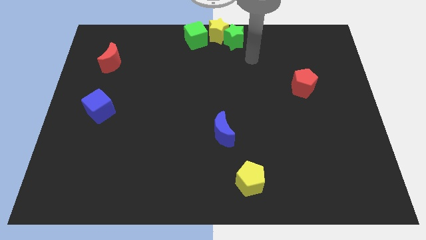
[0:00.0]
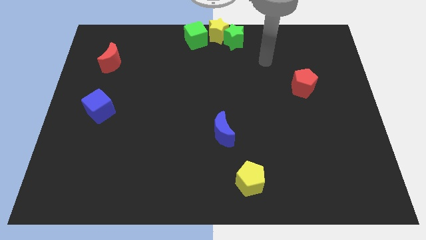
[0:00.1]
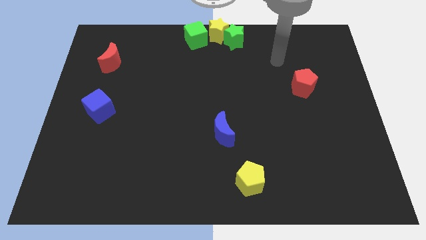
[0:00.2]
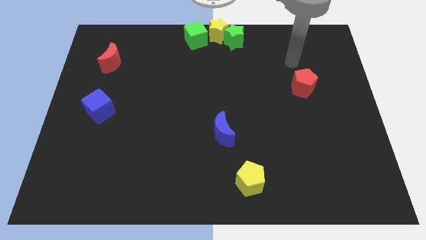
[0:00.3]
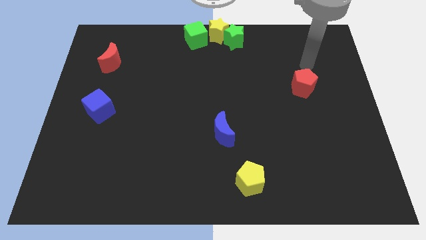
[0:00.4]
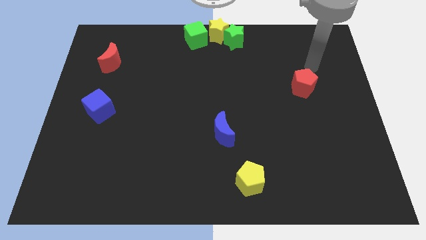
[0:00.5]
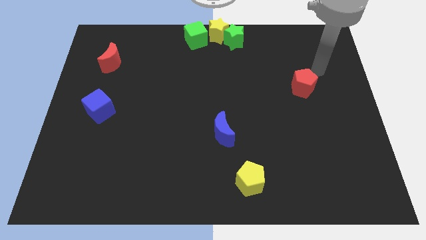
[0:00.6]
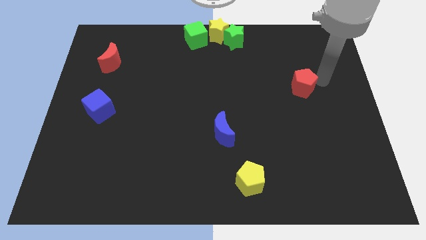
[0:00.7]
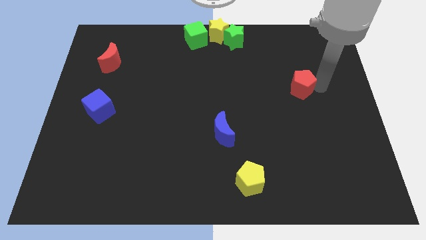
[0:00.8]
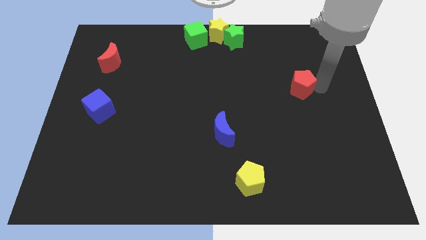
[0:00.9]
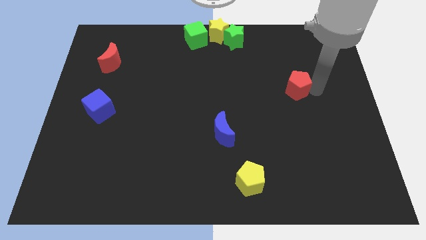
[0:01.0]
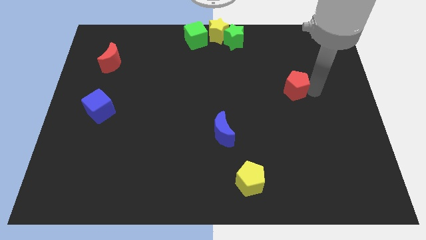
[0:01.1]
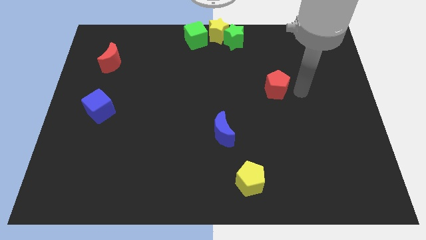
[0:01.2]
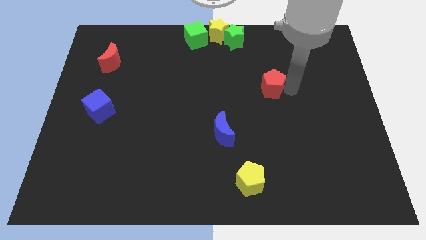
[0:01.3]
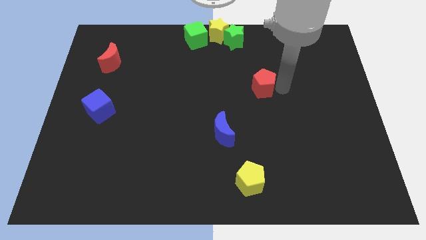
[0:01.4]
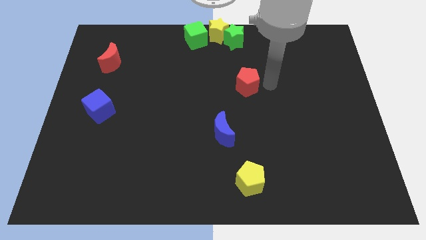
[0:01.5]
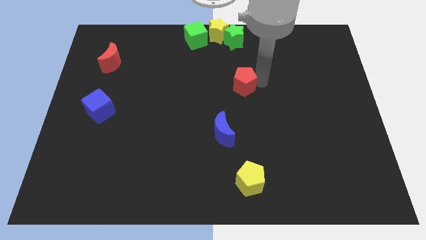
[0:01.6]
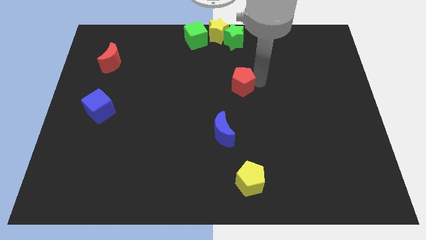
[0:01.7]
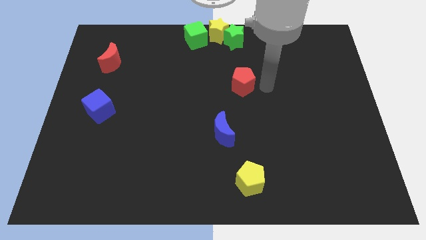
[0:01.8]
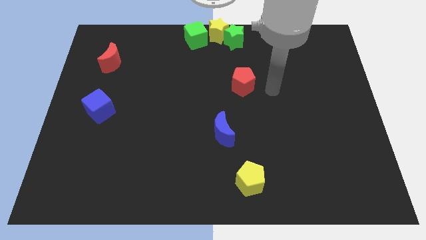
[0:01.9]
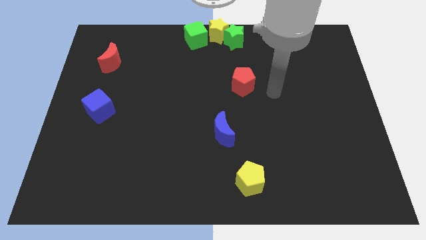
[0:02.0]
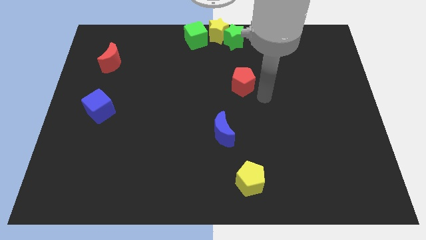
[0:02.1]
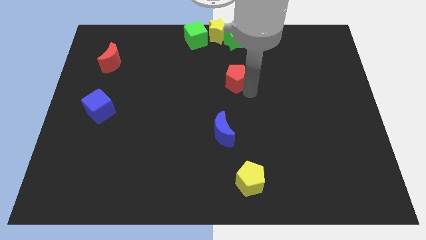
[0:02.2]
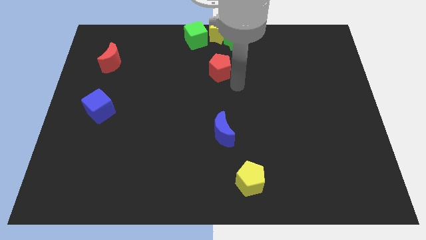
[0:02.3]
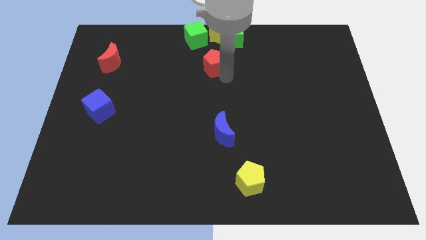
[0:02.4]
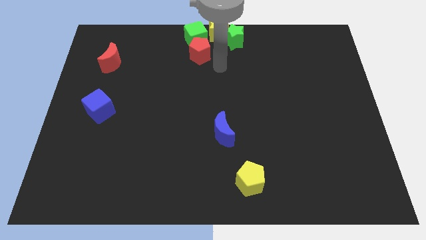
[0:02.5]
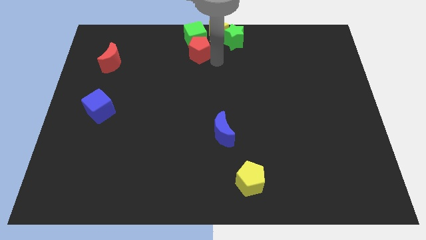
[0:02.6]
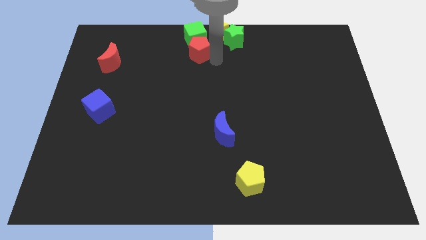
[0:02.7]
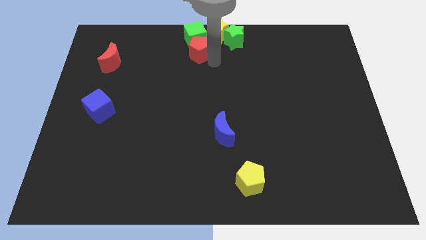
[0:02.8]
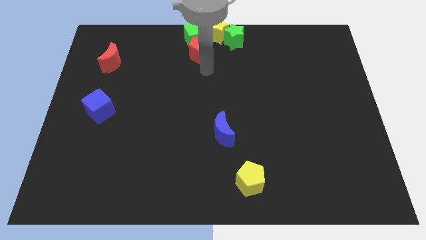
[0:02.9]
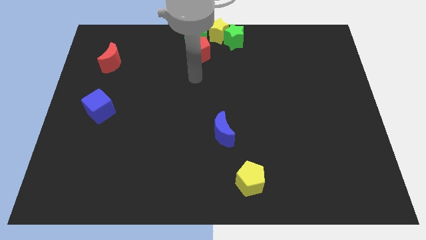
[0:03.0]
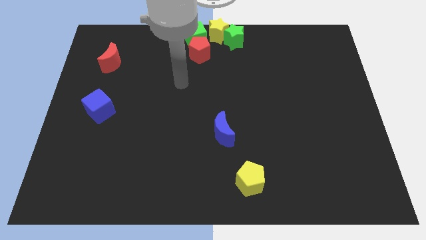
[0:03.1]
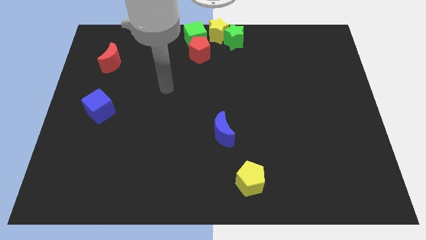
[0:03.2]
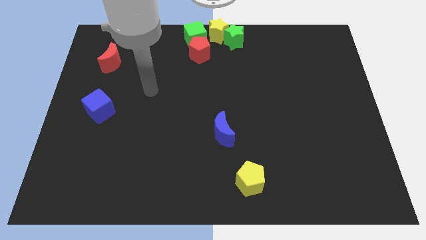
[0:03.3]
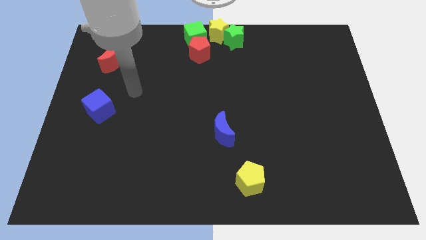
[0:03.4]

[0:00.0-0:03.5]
move the red pentagon to the top center of the board

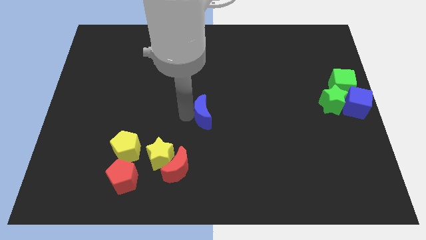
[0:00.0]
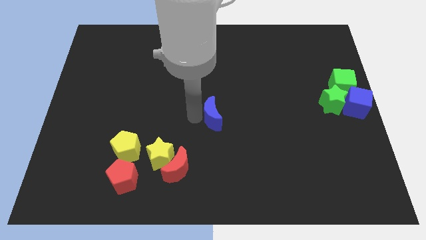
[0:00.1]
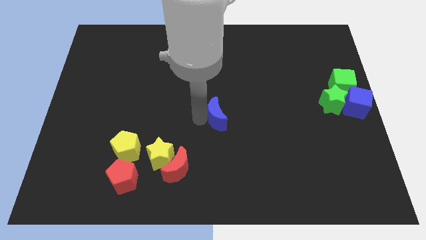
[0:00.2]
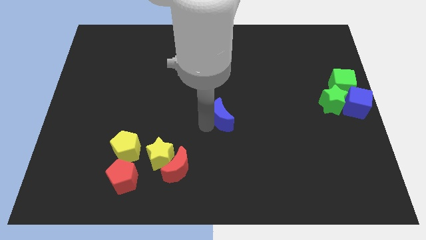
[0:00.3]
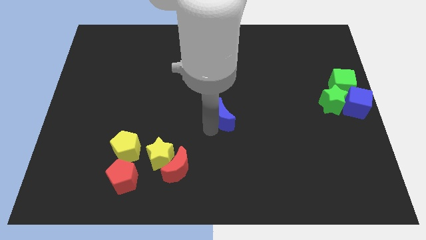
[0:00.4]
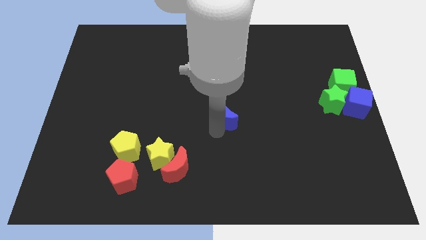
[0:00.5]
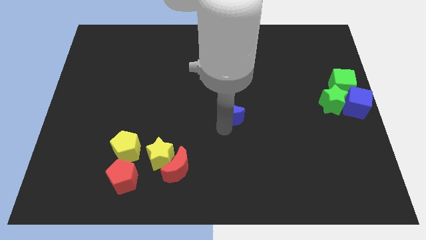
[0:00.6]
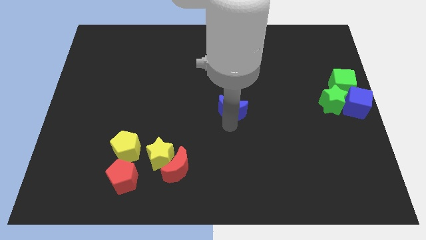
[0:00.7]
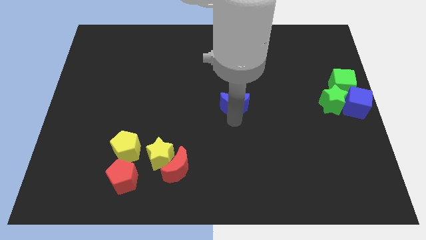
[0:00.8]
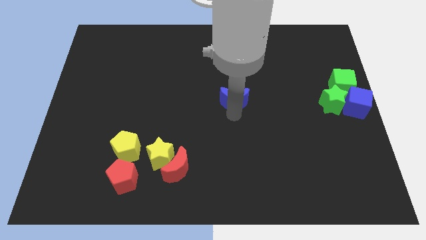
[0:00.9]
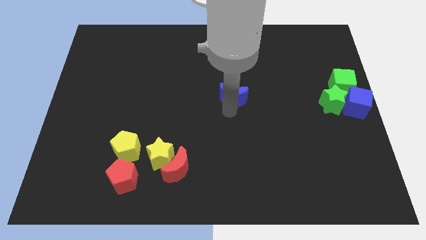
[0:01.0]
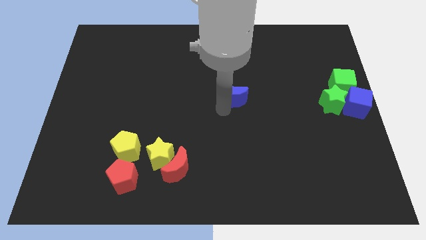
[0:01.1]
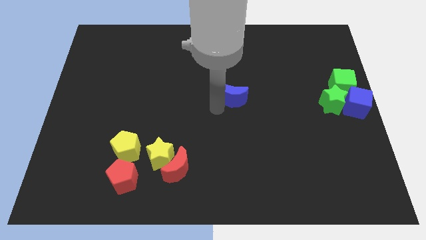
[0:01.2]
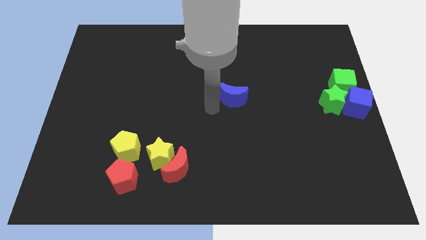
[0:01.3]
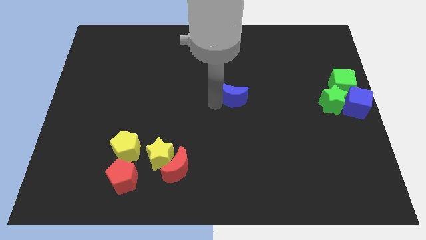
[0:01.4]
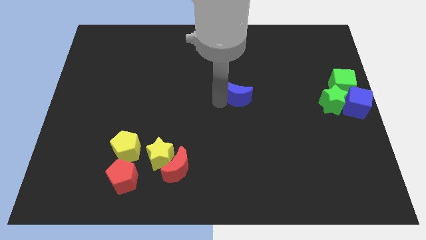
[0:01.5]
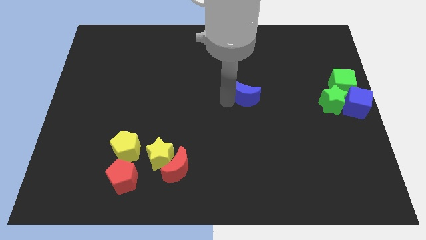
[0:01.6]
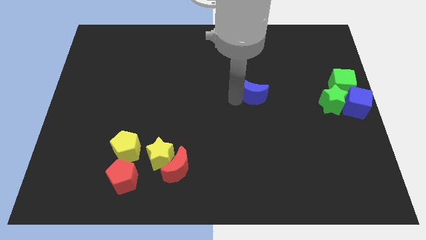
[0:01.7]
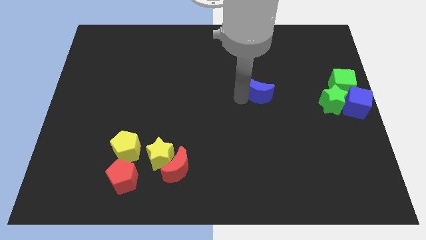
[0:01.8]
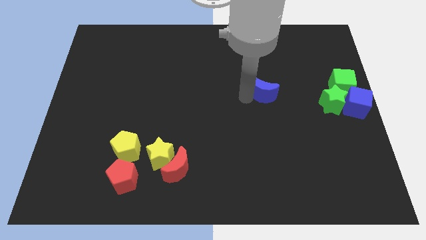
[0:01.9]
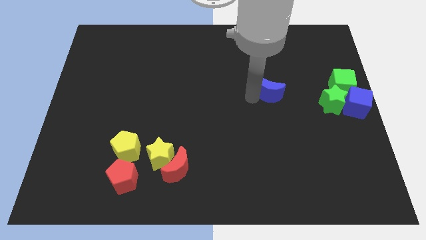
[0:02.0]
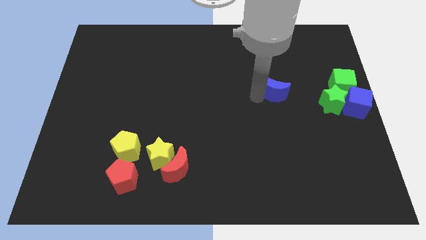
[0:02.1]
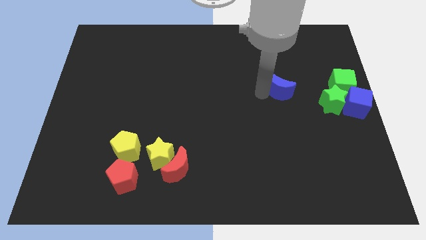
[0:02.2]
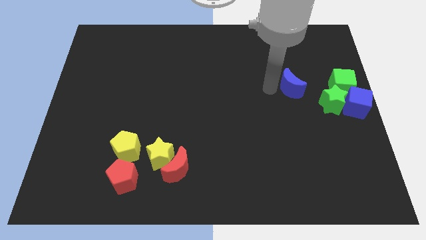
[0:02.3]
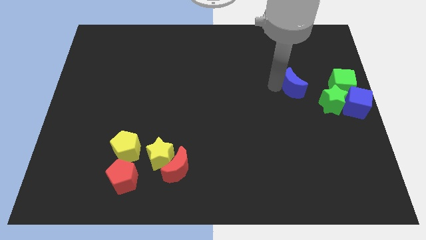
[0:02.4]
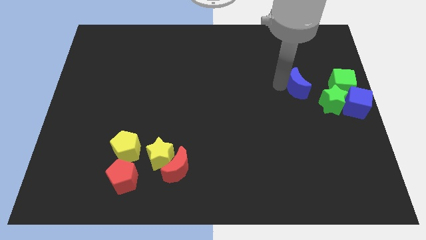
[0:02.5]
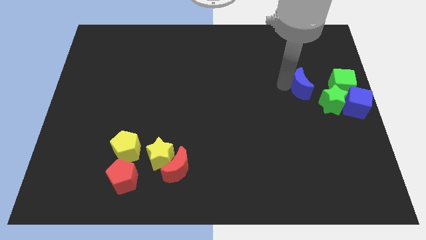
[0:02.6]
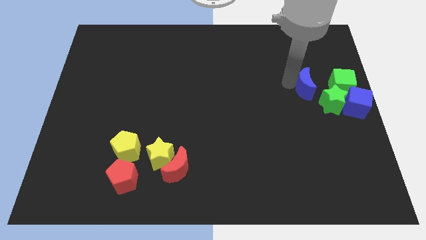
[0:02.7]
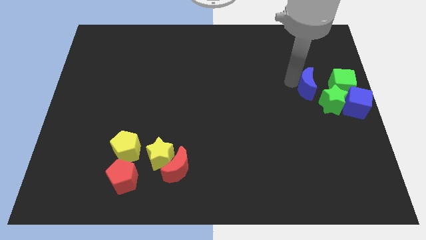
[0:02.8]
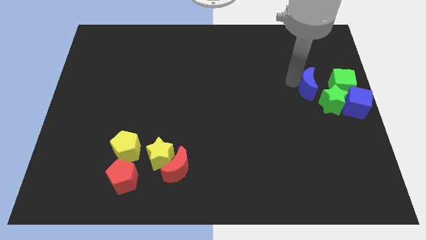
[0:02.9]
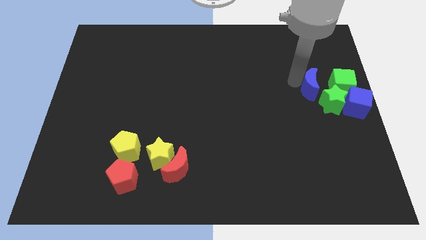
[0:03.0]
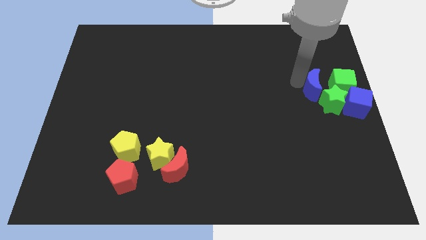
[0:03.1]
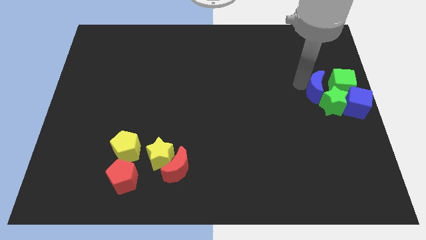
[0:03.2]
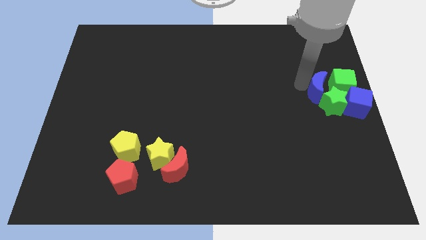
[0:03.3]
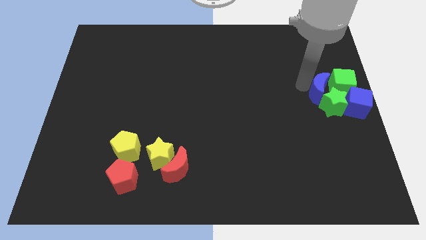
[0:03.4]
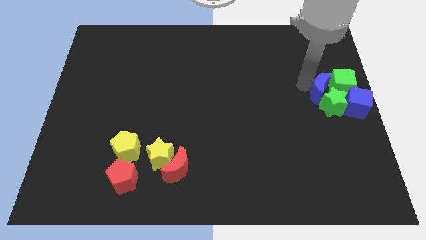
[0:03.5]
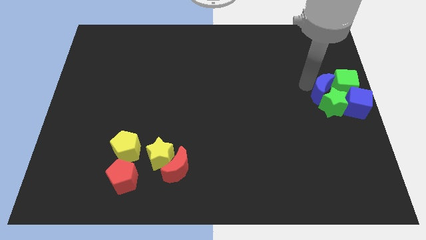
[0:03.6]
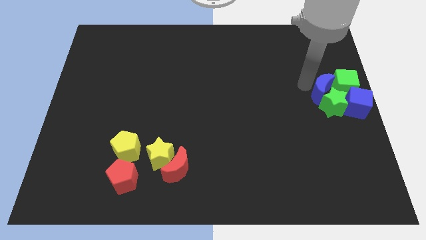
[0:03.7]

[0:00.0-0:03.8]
push the blue crescent to the right center of the board

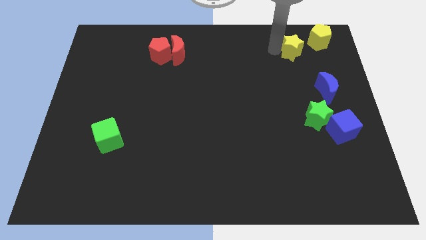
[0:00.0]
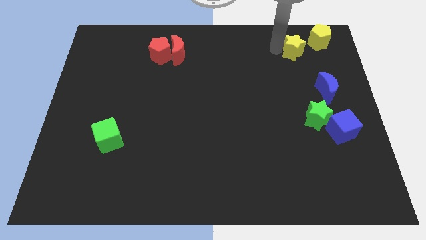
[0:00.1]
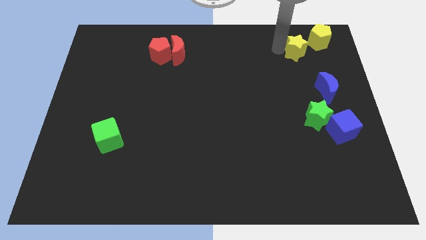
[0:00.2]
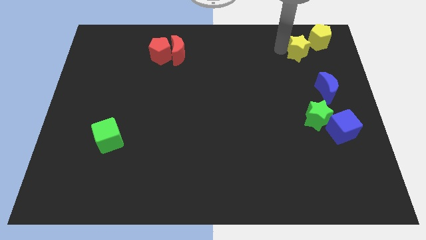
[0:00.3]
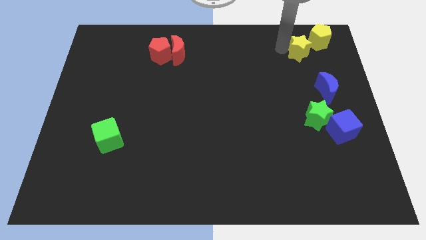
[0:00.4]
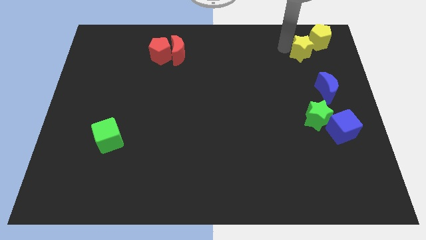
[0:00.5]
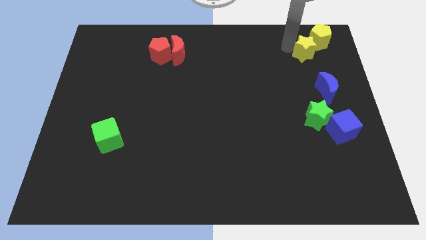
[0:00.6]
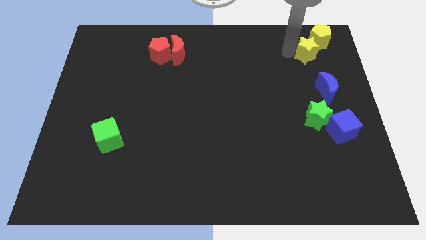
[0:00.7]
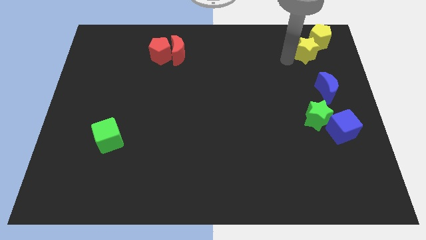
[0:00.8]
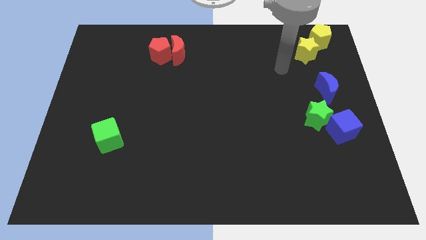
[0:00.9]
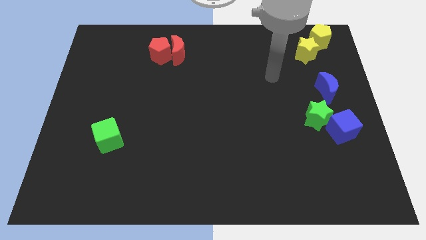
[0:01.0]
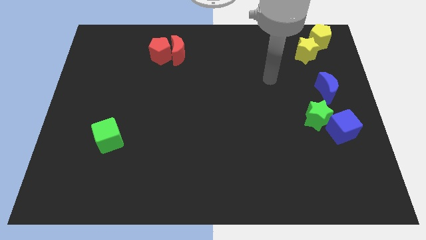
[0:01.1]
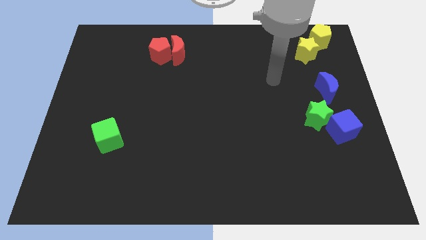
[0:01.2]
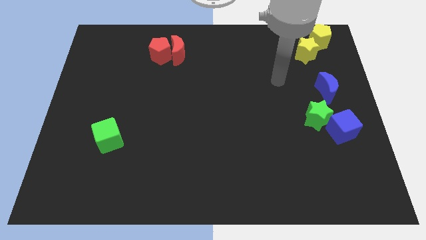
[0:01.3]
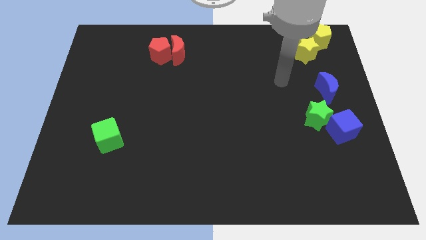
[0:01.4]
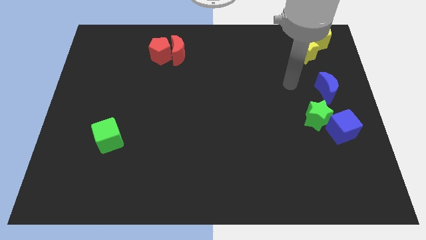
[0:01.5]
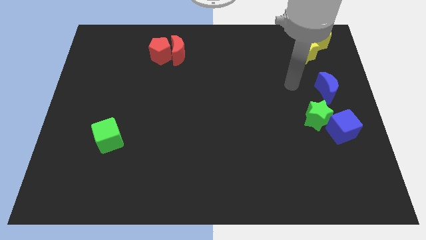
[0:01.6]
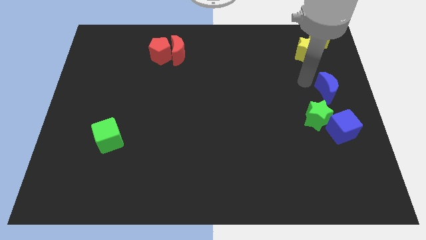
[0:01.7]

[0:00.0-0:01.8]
move the yellow star below the yellow pentagon
